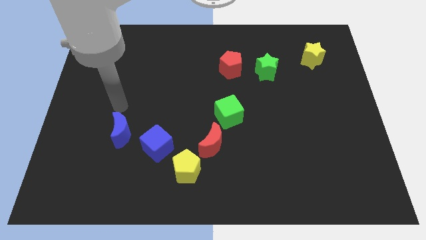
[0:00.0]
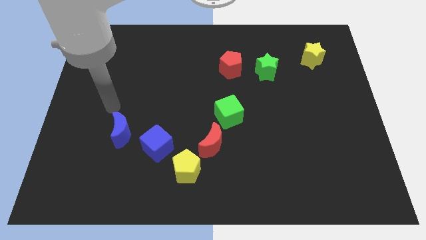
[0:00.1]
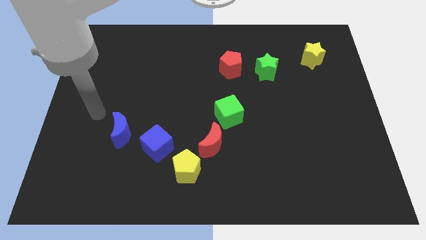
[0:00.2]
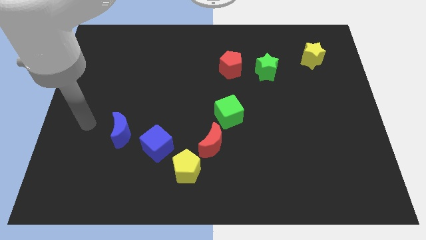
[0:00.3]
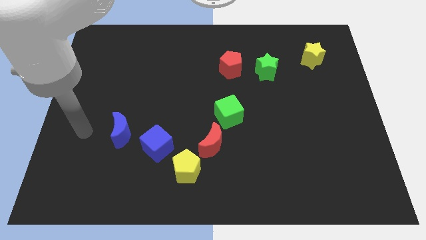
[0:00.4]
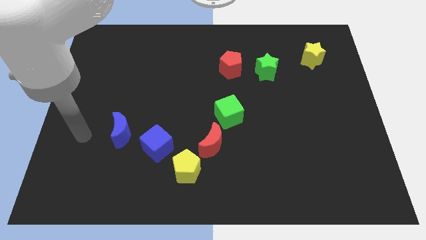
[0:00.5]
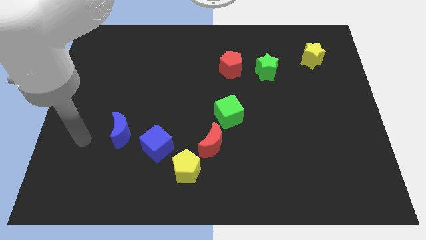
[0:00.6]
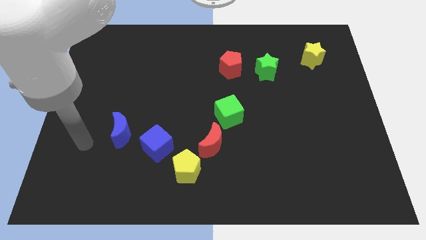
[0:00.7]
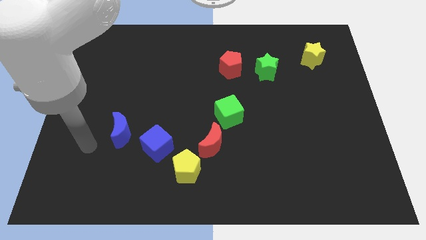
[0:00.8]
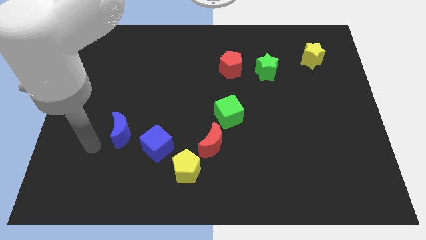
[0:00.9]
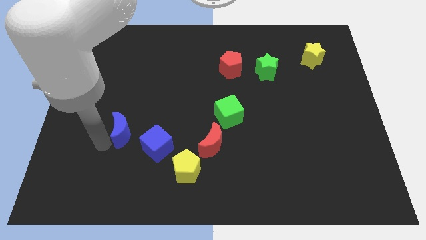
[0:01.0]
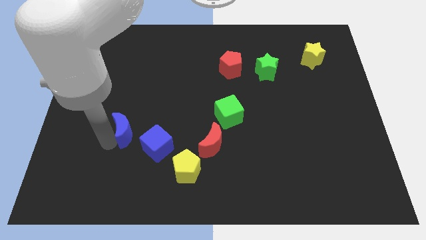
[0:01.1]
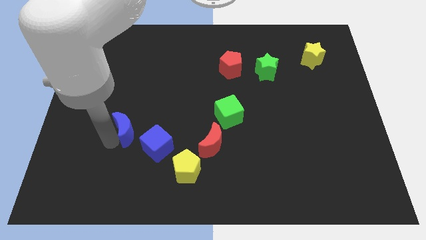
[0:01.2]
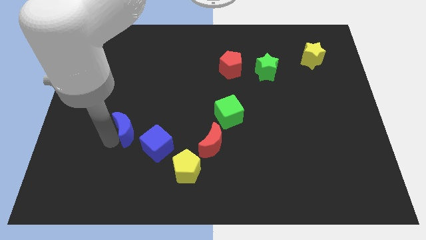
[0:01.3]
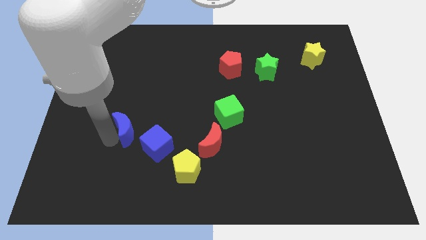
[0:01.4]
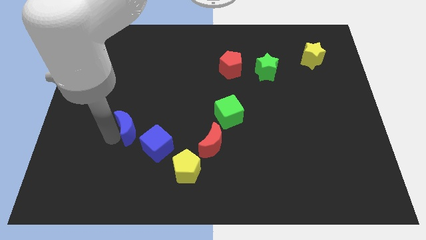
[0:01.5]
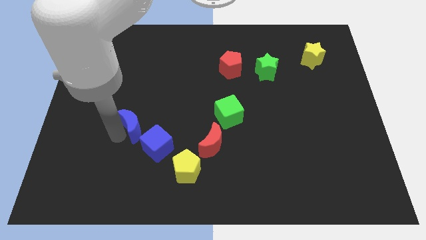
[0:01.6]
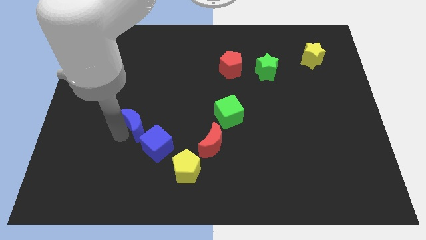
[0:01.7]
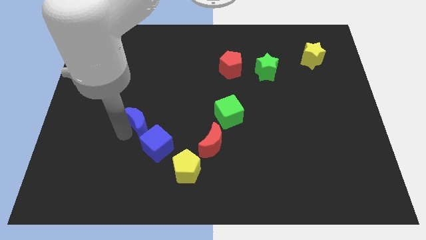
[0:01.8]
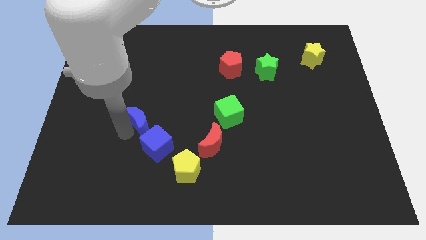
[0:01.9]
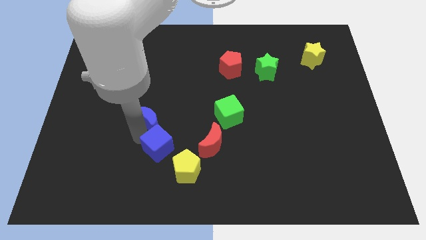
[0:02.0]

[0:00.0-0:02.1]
push the blue moon to the top left side of the blue cube

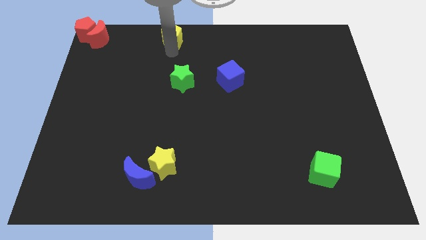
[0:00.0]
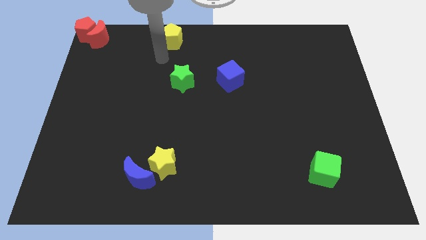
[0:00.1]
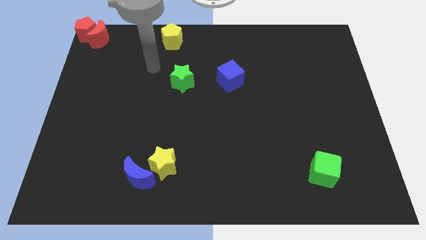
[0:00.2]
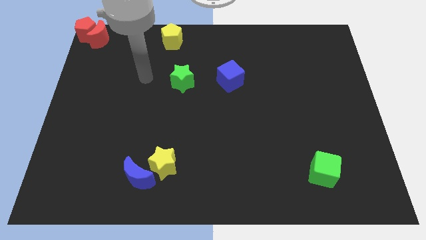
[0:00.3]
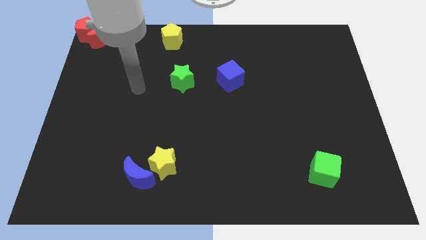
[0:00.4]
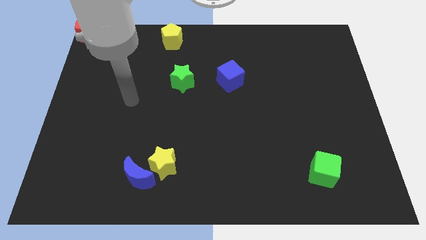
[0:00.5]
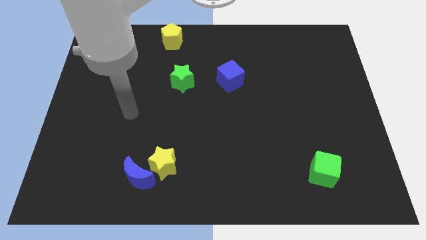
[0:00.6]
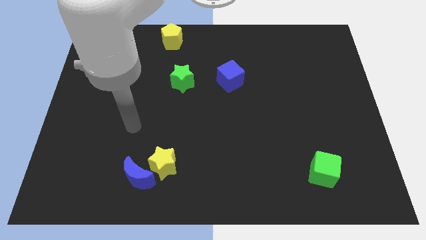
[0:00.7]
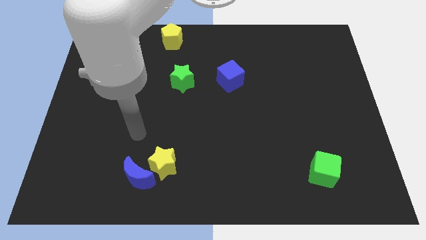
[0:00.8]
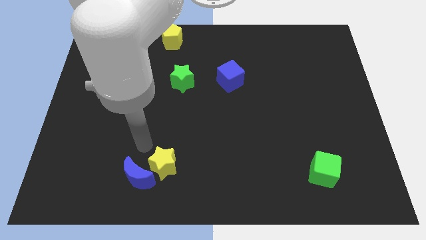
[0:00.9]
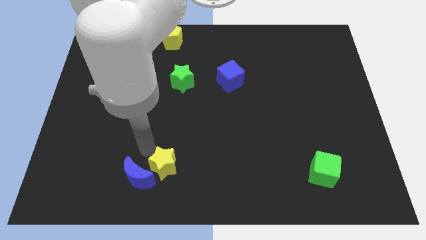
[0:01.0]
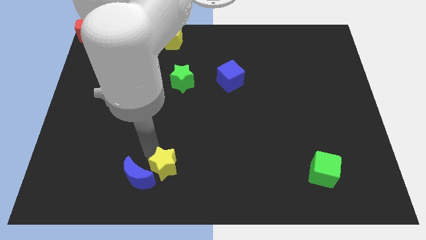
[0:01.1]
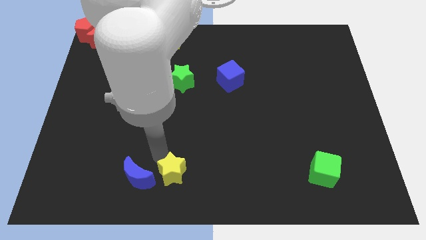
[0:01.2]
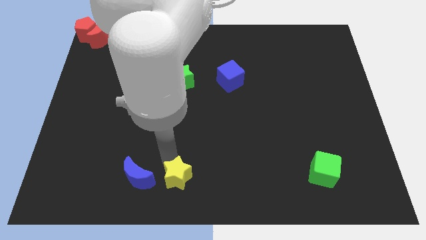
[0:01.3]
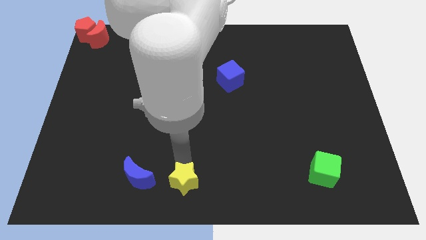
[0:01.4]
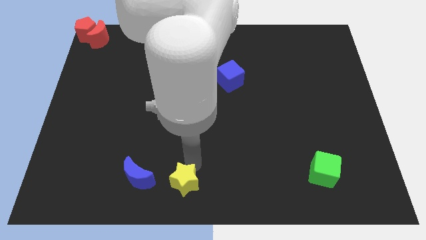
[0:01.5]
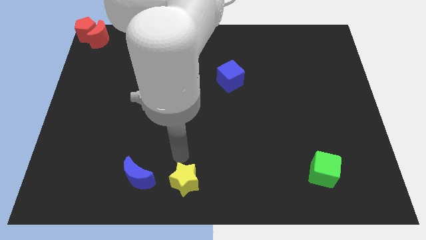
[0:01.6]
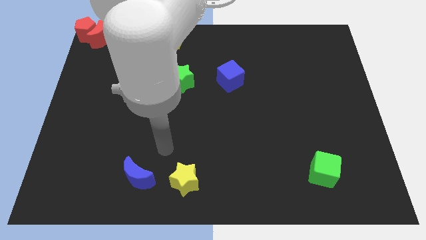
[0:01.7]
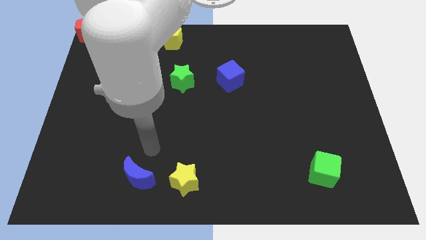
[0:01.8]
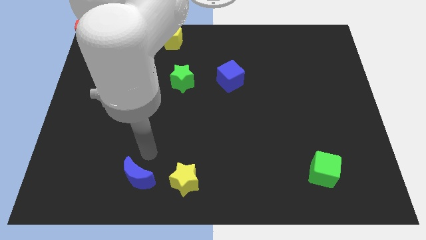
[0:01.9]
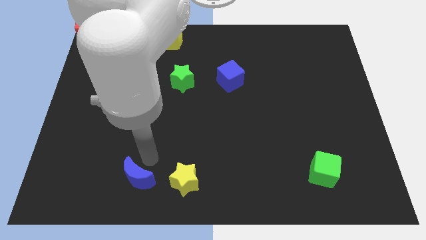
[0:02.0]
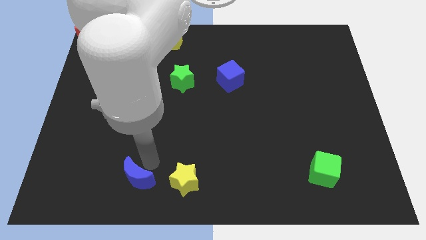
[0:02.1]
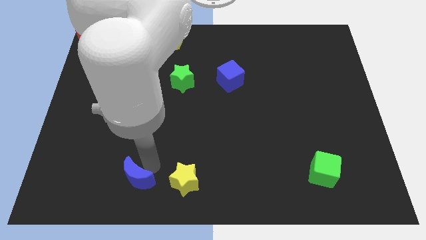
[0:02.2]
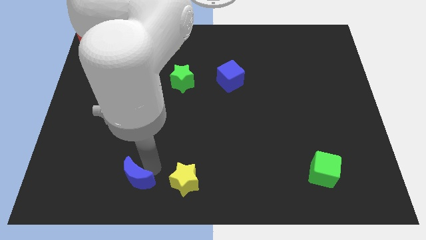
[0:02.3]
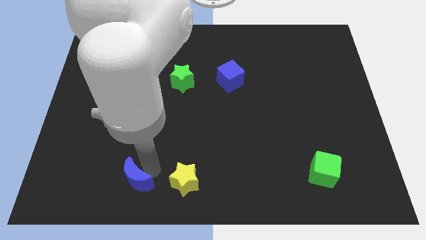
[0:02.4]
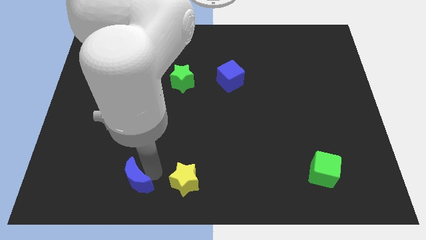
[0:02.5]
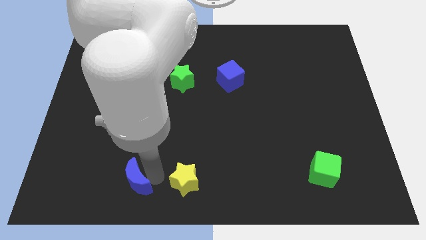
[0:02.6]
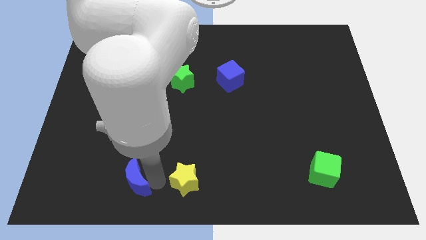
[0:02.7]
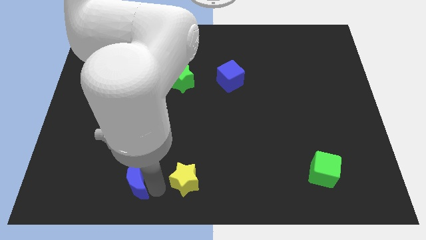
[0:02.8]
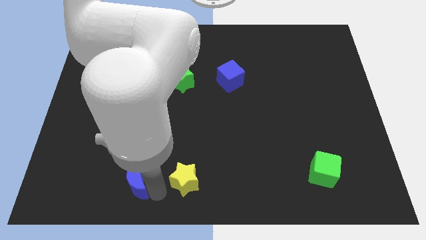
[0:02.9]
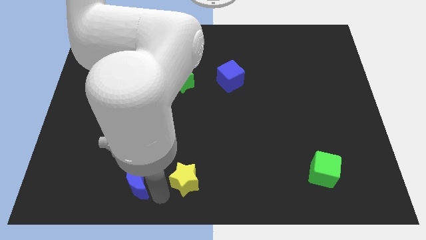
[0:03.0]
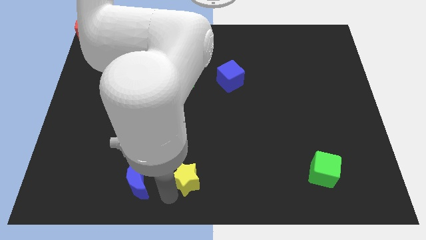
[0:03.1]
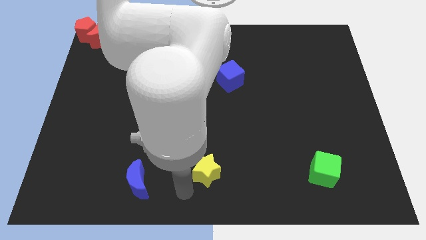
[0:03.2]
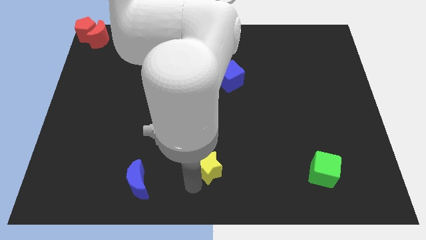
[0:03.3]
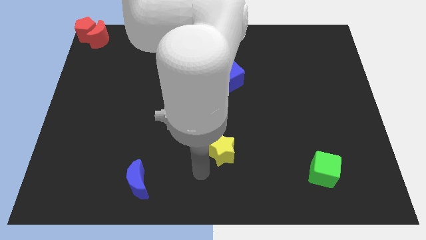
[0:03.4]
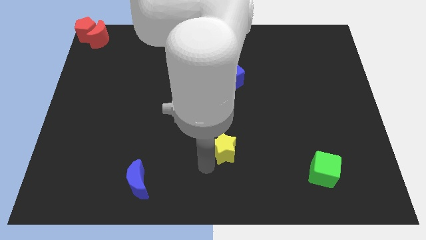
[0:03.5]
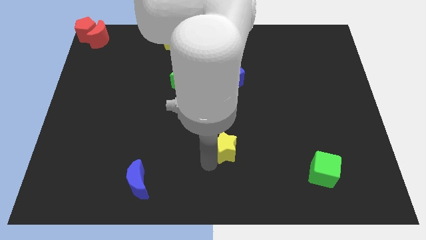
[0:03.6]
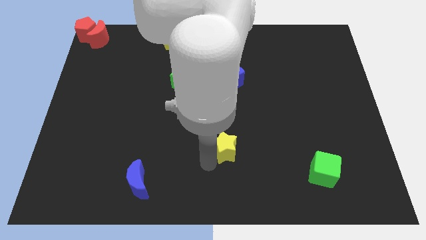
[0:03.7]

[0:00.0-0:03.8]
move the yellow star away from blue moon

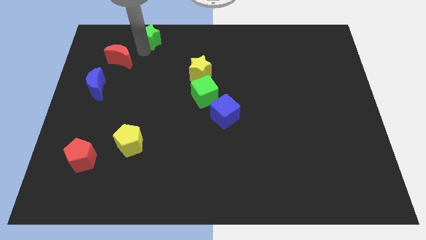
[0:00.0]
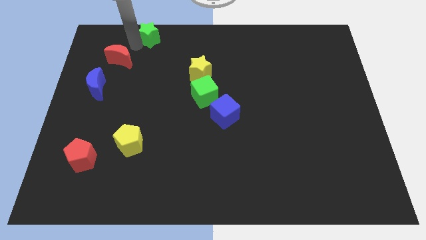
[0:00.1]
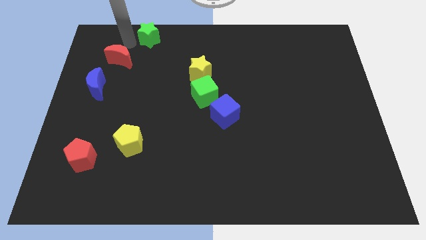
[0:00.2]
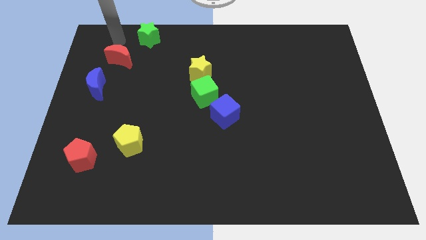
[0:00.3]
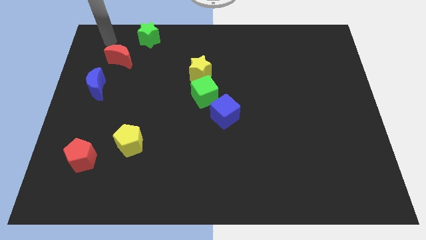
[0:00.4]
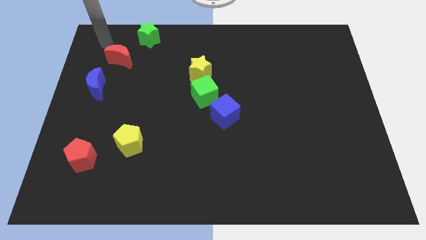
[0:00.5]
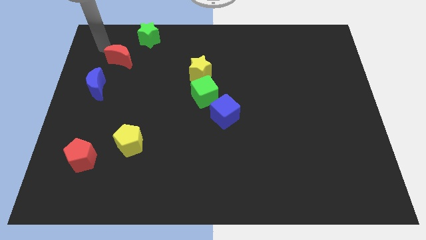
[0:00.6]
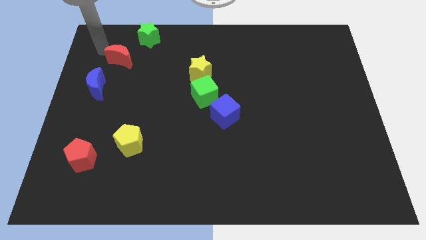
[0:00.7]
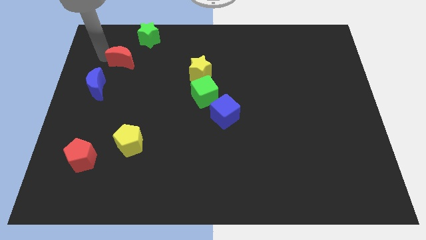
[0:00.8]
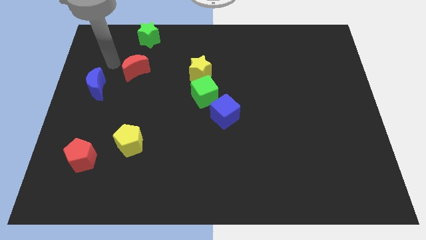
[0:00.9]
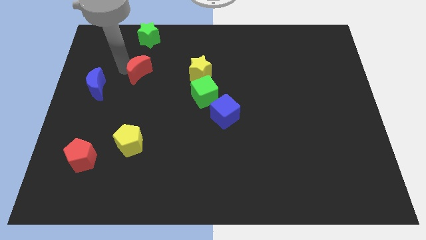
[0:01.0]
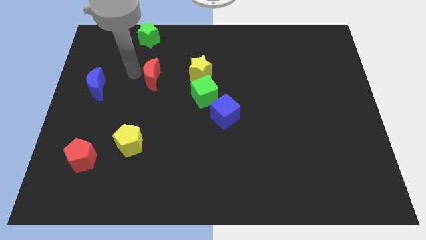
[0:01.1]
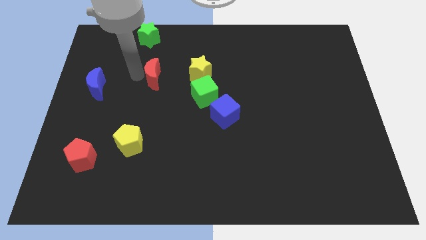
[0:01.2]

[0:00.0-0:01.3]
slide the red moon vertically below the green star

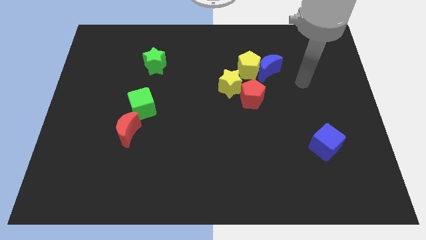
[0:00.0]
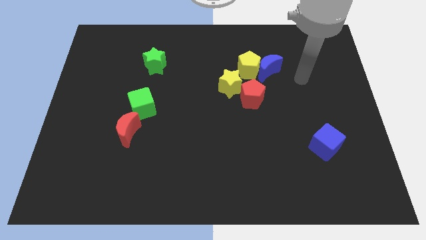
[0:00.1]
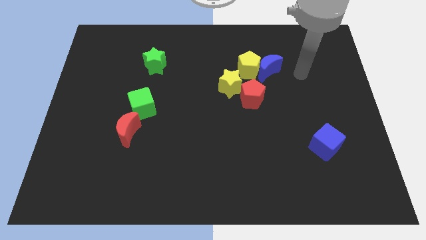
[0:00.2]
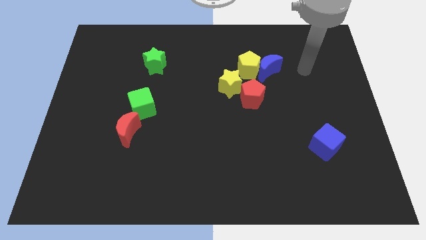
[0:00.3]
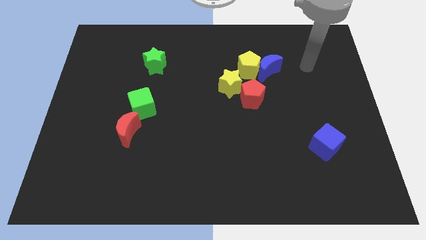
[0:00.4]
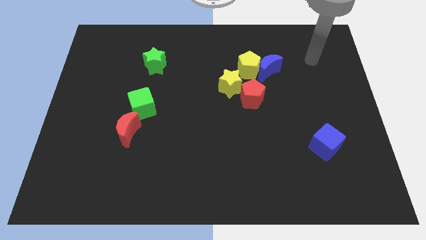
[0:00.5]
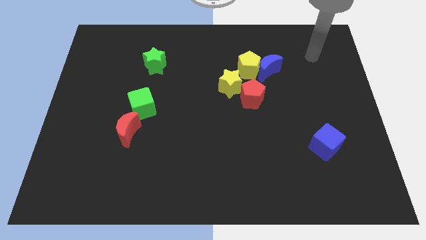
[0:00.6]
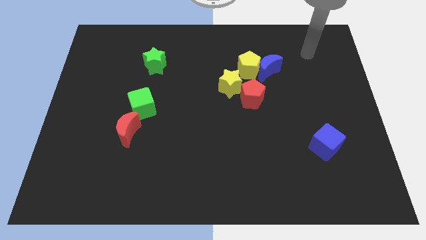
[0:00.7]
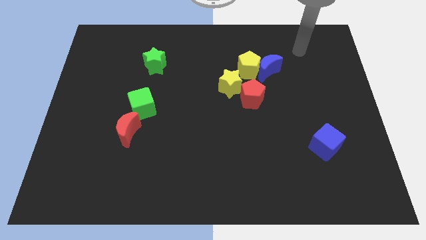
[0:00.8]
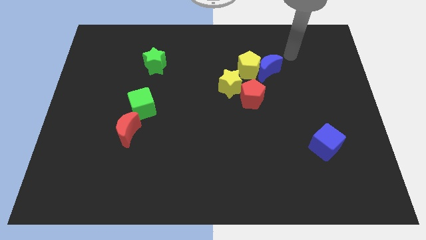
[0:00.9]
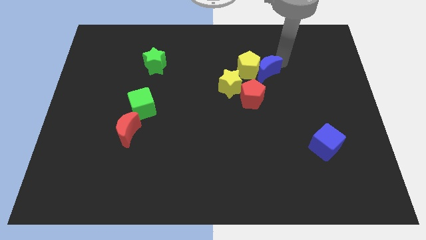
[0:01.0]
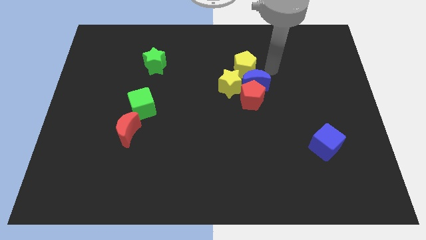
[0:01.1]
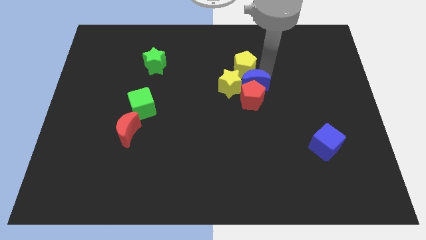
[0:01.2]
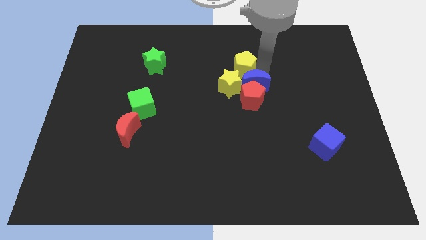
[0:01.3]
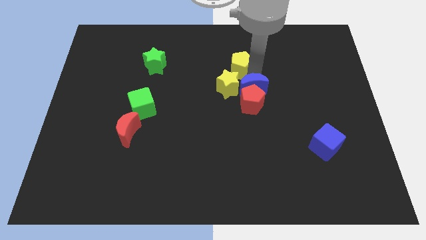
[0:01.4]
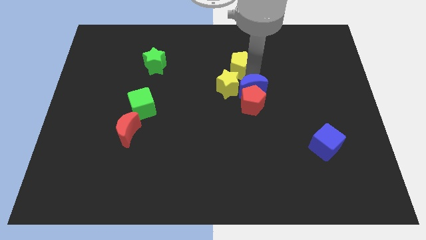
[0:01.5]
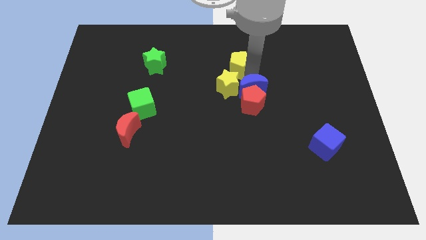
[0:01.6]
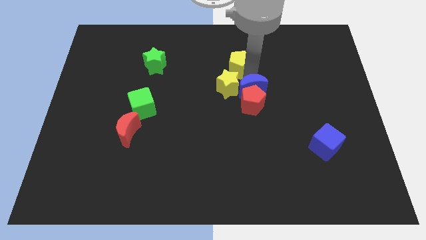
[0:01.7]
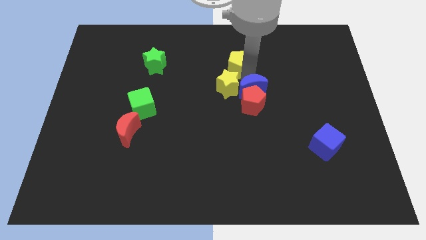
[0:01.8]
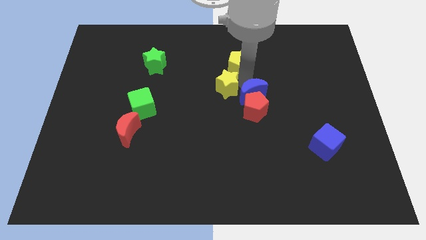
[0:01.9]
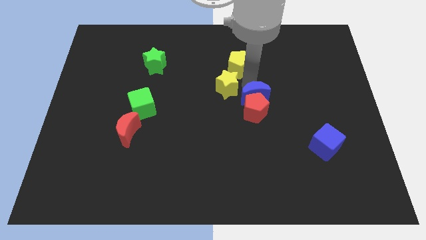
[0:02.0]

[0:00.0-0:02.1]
tap the blue crescent slightly towards the red pentagon
